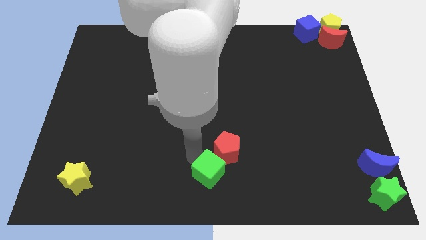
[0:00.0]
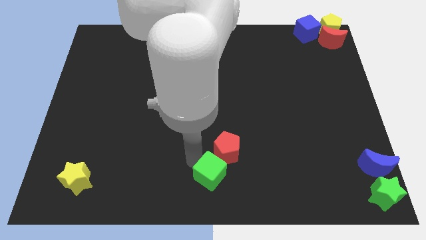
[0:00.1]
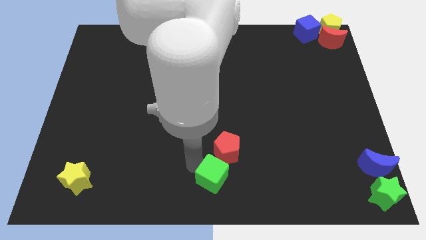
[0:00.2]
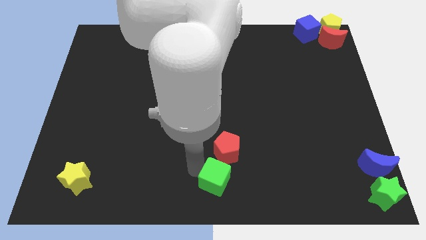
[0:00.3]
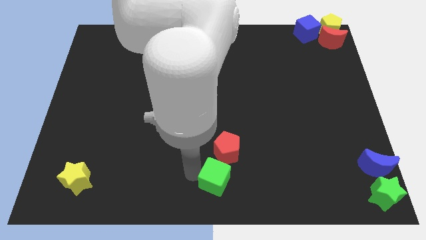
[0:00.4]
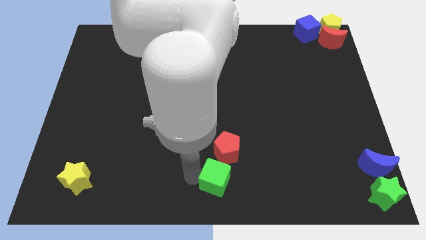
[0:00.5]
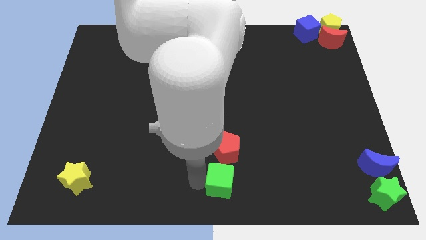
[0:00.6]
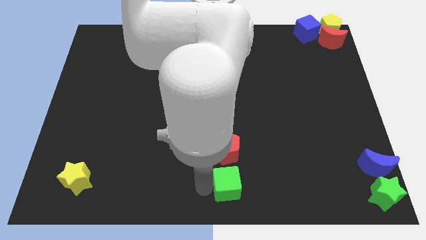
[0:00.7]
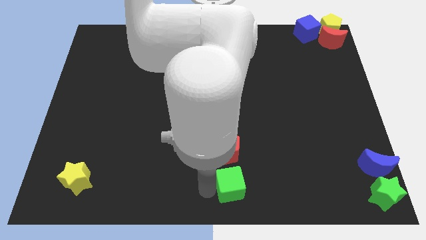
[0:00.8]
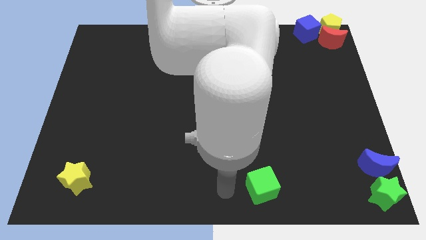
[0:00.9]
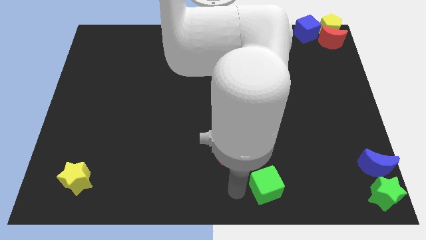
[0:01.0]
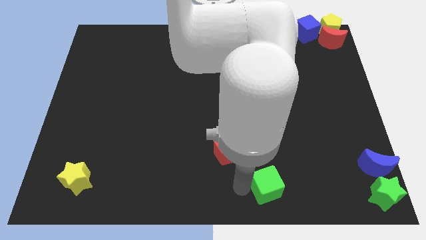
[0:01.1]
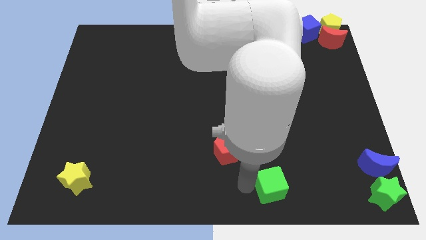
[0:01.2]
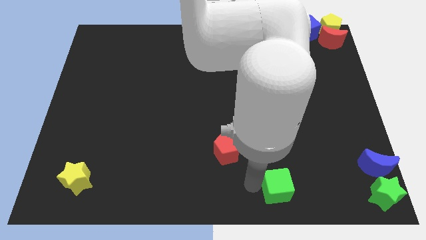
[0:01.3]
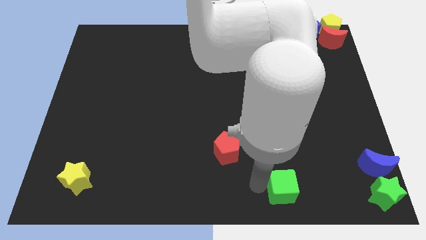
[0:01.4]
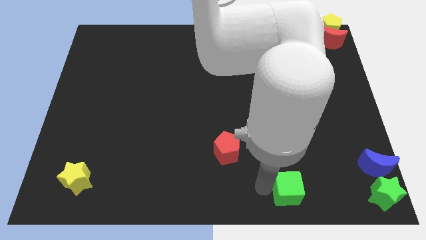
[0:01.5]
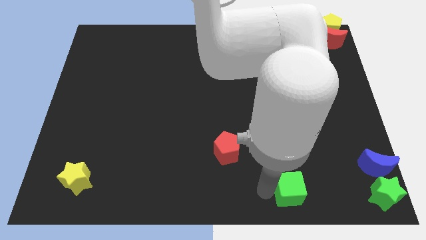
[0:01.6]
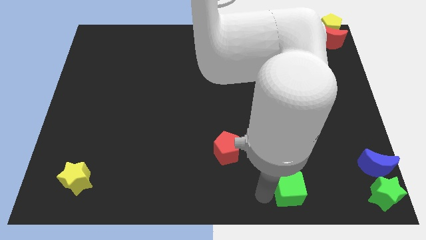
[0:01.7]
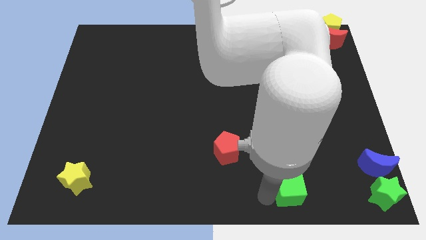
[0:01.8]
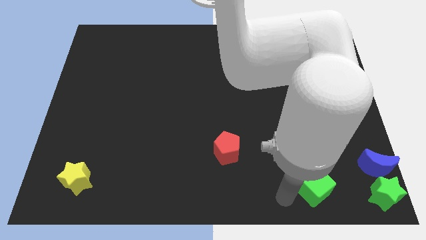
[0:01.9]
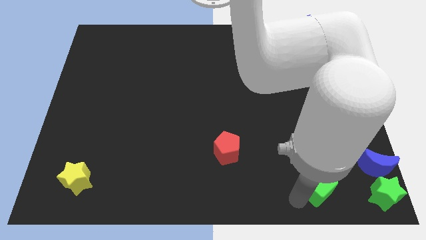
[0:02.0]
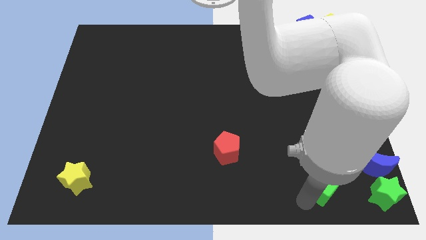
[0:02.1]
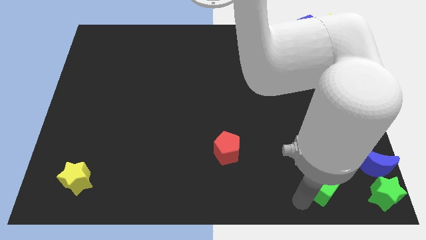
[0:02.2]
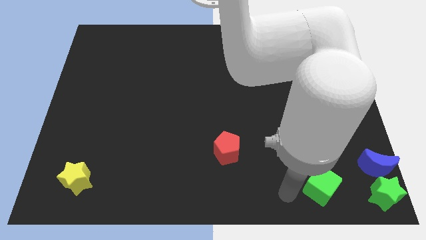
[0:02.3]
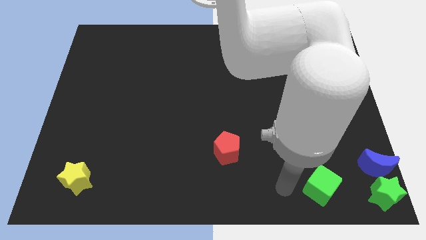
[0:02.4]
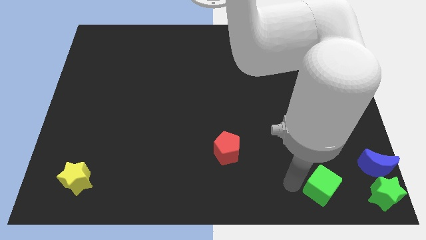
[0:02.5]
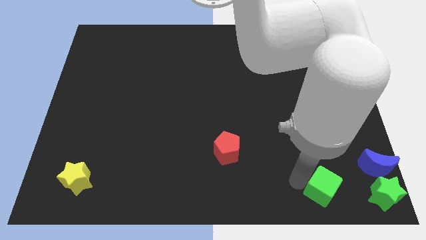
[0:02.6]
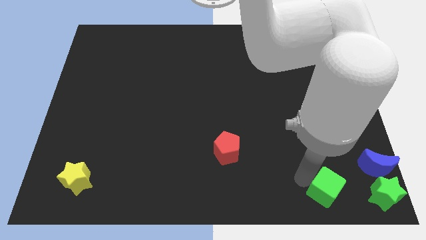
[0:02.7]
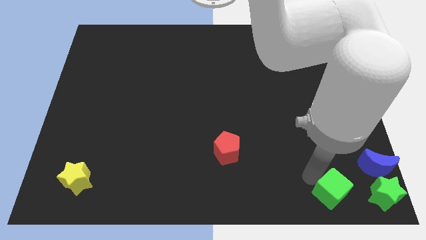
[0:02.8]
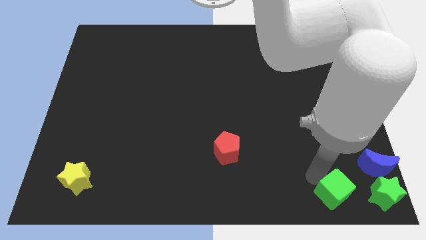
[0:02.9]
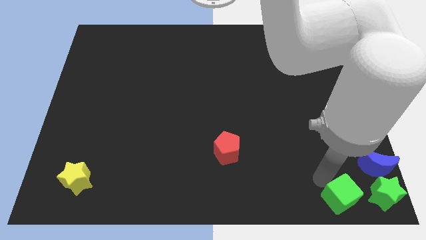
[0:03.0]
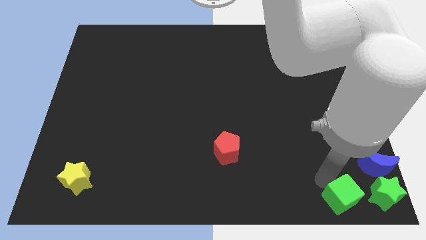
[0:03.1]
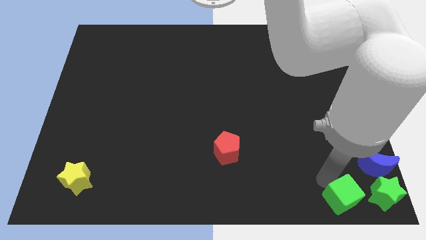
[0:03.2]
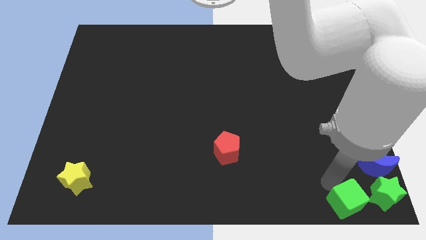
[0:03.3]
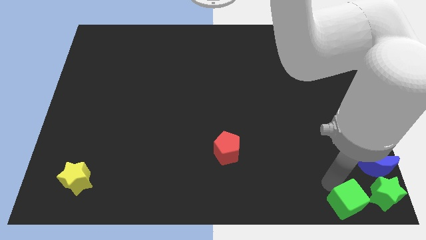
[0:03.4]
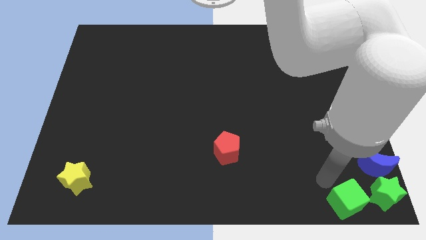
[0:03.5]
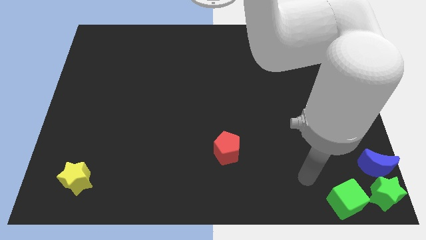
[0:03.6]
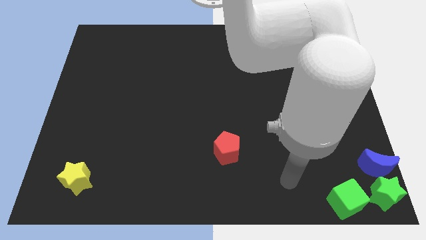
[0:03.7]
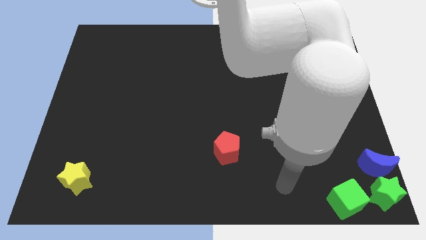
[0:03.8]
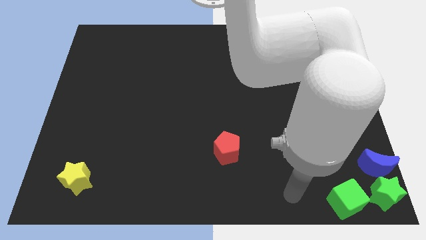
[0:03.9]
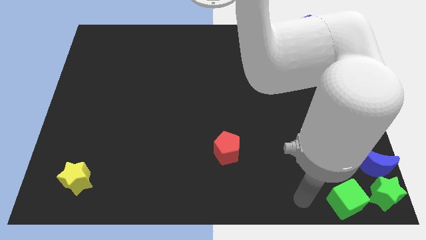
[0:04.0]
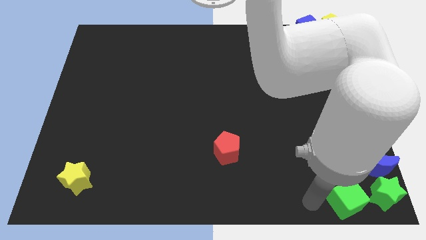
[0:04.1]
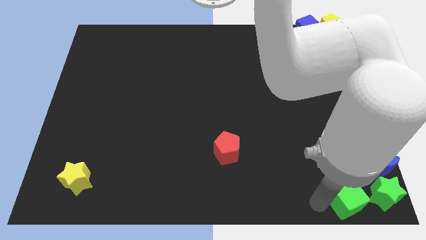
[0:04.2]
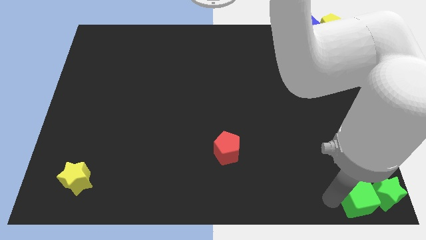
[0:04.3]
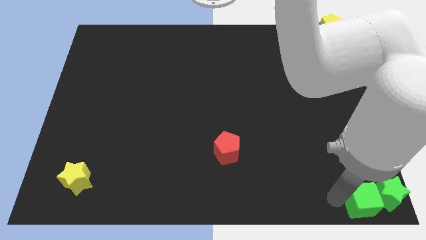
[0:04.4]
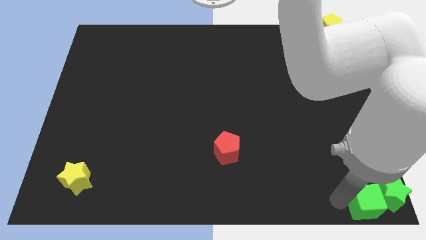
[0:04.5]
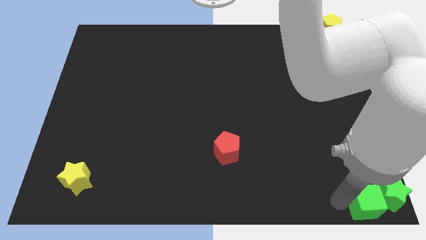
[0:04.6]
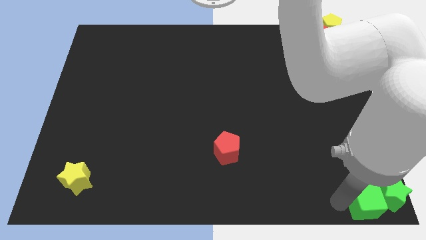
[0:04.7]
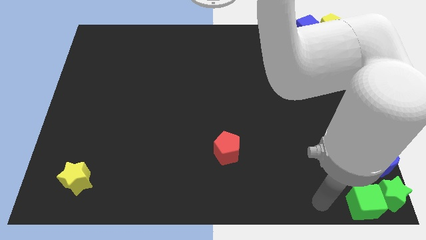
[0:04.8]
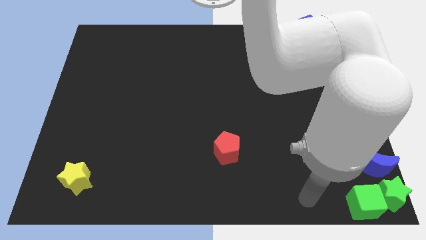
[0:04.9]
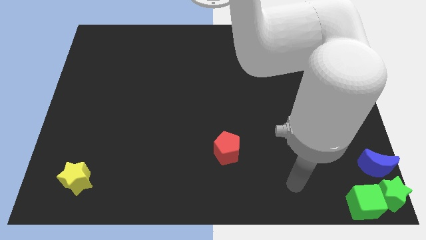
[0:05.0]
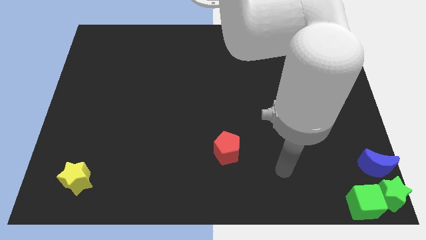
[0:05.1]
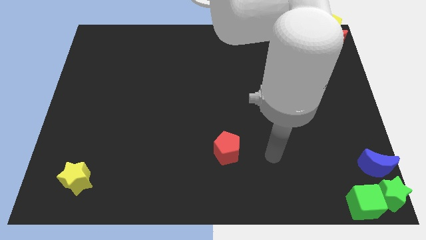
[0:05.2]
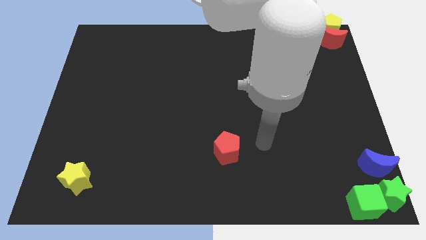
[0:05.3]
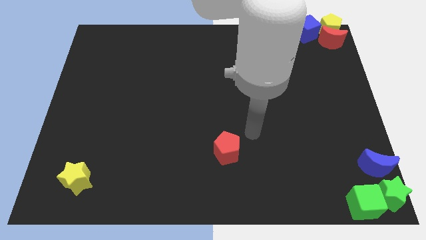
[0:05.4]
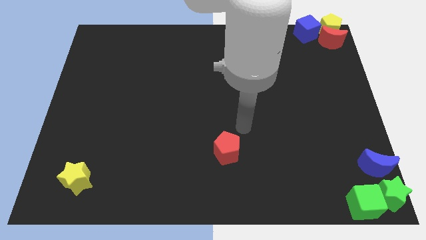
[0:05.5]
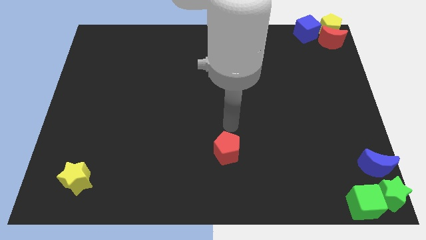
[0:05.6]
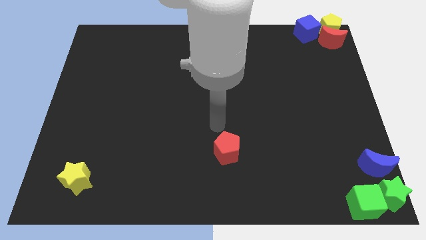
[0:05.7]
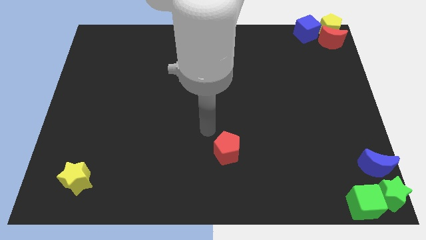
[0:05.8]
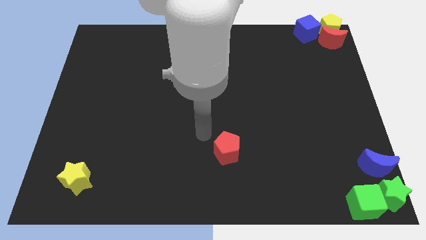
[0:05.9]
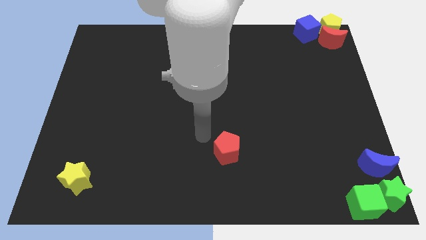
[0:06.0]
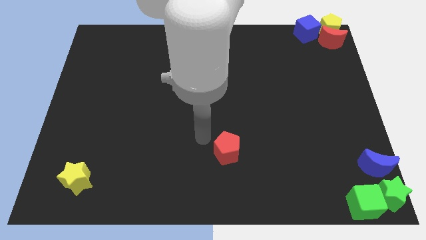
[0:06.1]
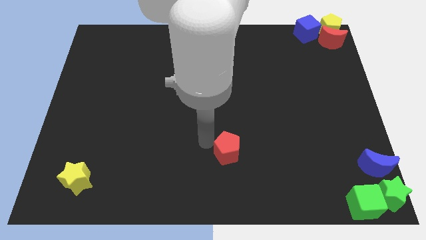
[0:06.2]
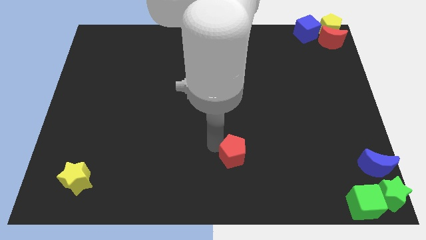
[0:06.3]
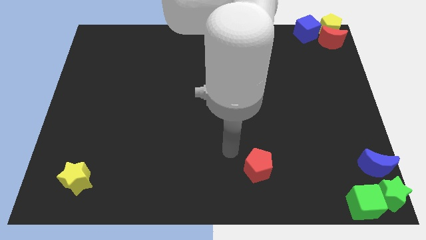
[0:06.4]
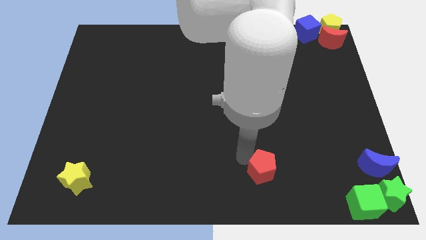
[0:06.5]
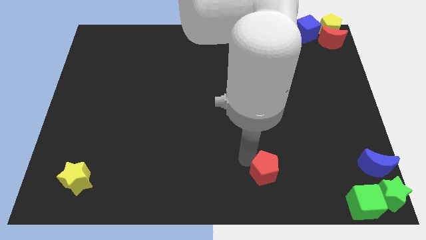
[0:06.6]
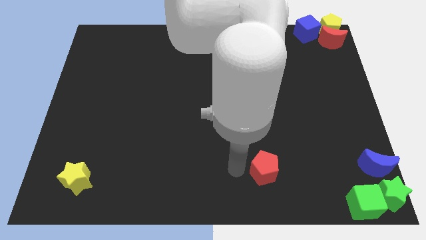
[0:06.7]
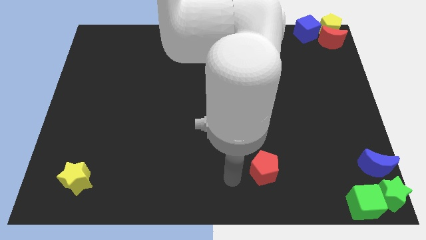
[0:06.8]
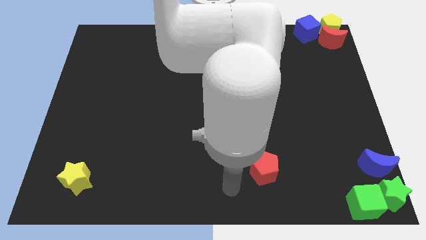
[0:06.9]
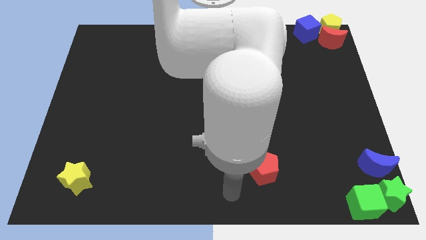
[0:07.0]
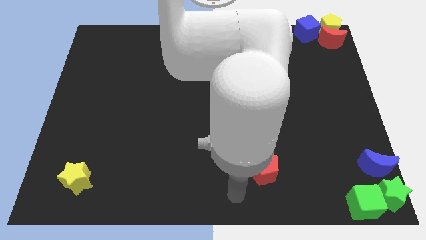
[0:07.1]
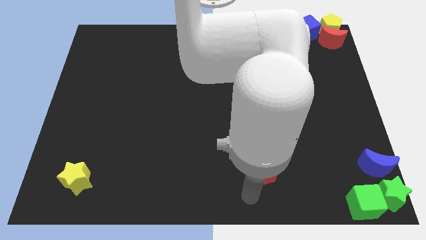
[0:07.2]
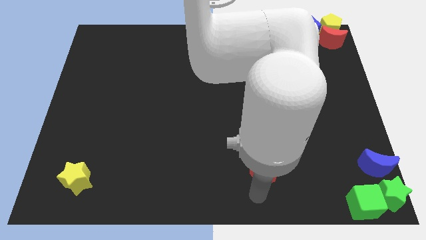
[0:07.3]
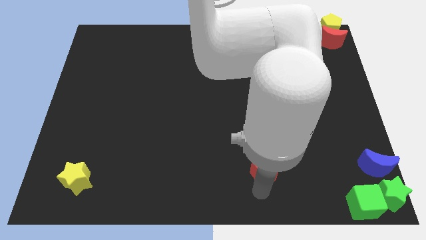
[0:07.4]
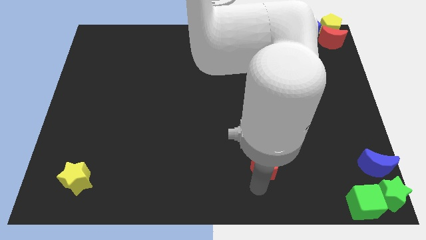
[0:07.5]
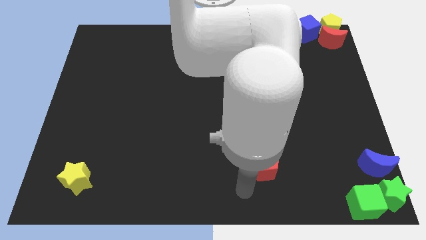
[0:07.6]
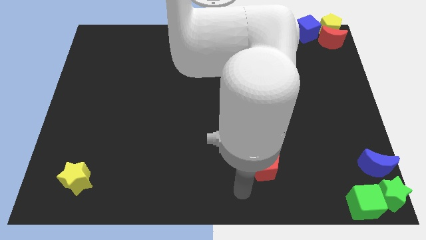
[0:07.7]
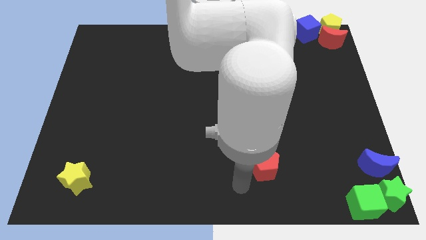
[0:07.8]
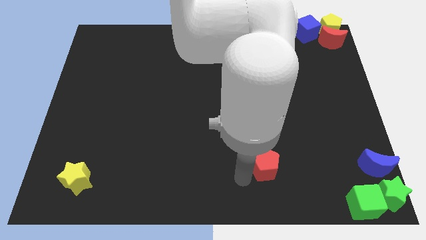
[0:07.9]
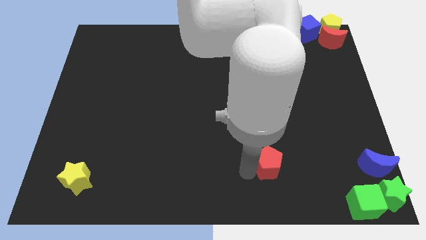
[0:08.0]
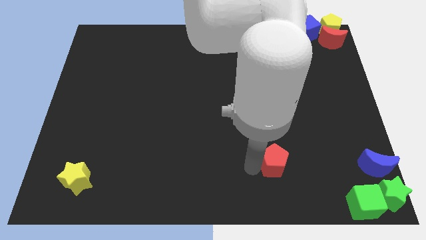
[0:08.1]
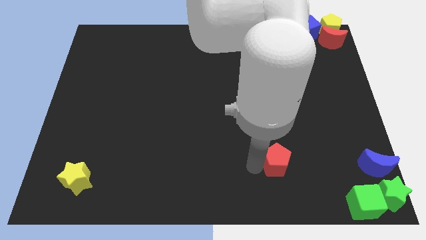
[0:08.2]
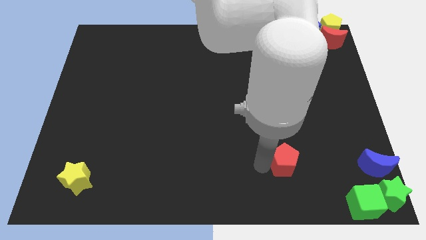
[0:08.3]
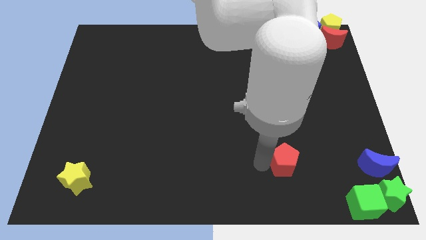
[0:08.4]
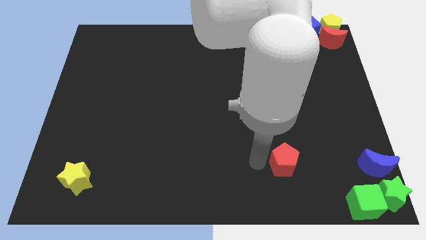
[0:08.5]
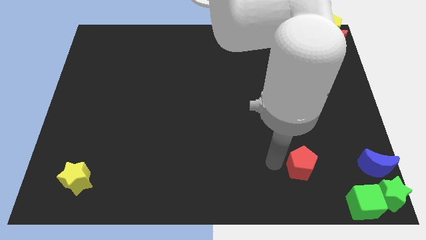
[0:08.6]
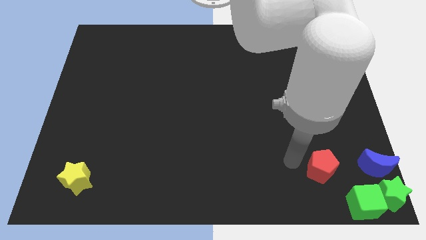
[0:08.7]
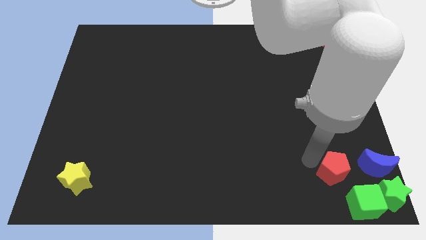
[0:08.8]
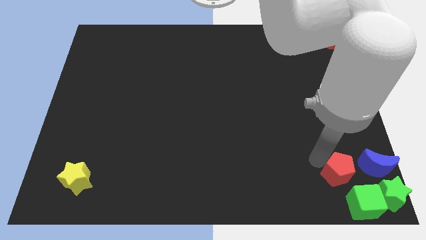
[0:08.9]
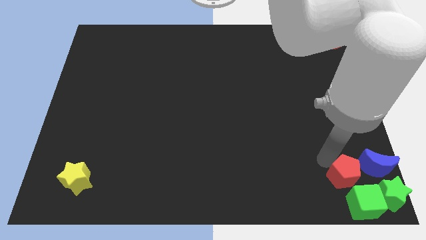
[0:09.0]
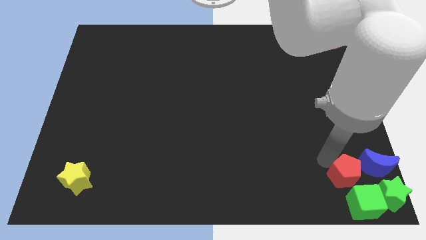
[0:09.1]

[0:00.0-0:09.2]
group up the green cube and red pentagon with the blue crescent and green star at the bottom right of the table
